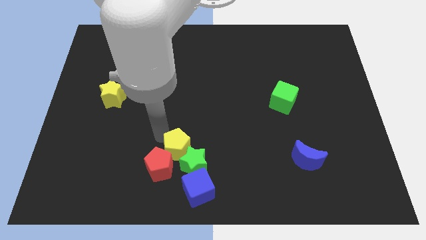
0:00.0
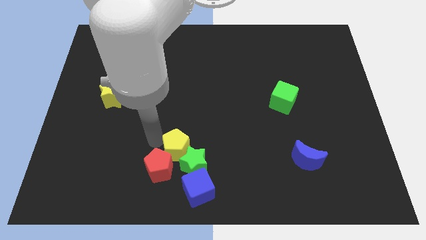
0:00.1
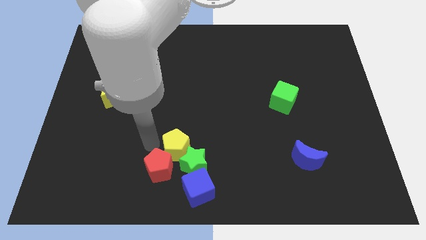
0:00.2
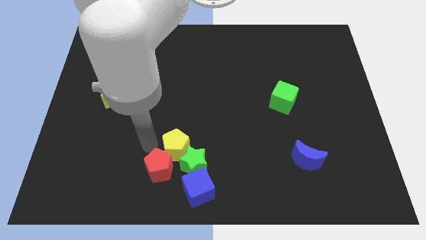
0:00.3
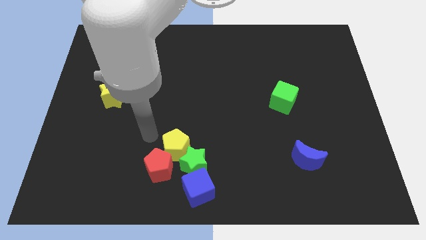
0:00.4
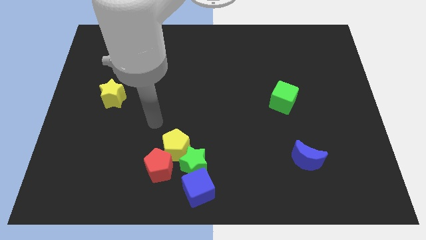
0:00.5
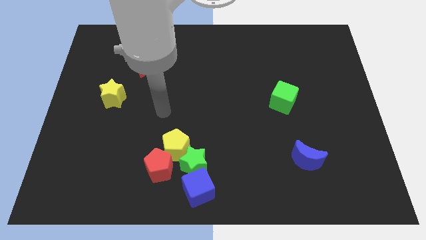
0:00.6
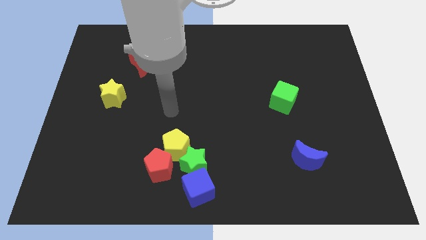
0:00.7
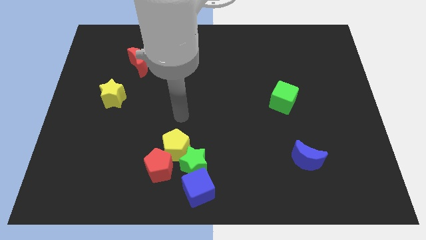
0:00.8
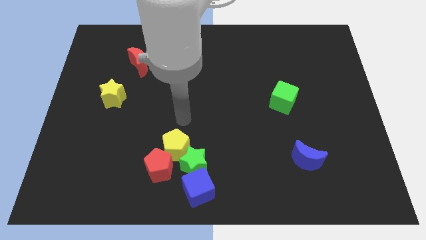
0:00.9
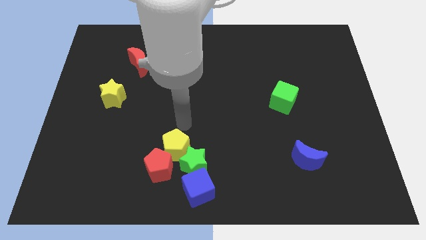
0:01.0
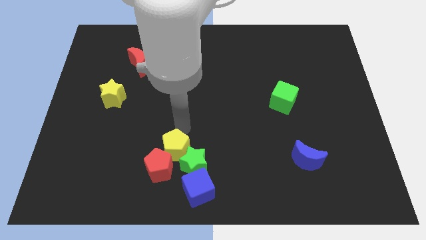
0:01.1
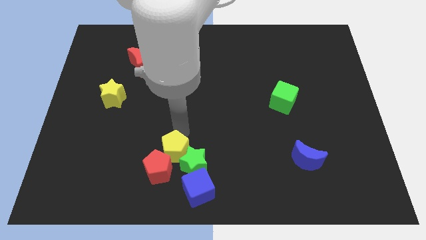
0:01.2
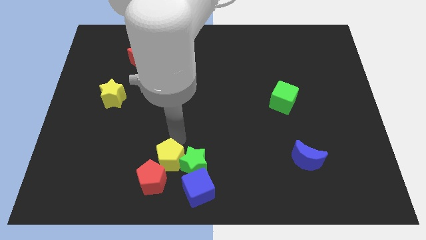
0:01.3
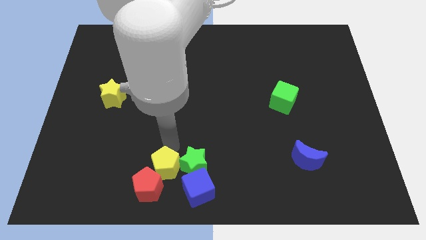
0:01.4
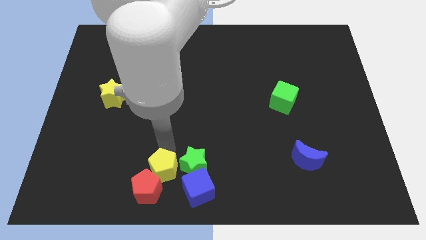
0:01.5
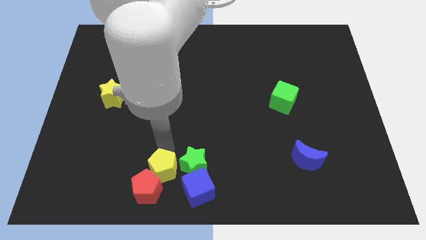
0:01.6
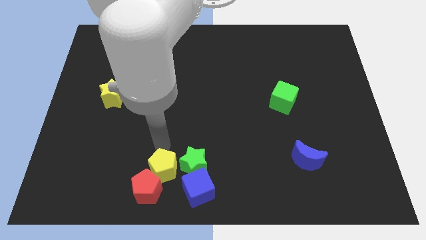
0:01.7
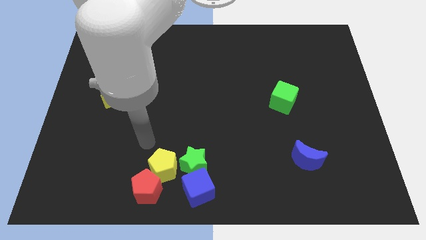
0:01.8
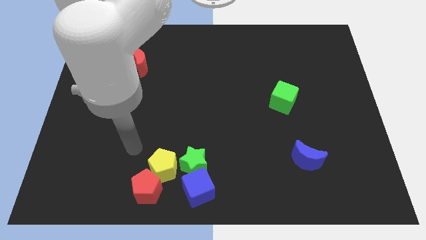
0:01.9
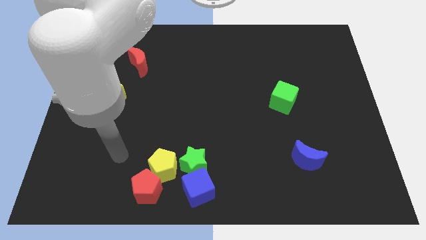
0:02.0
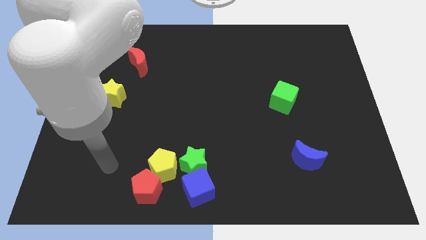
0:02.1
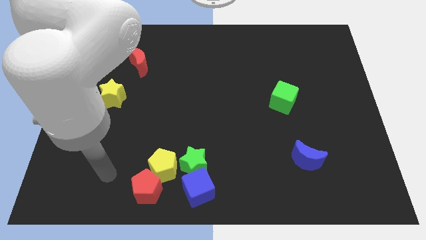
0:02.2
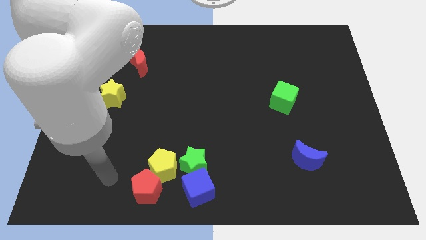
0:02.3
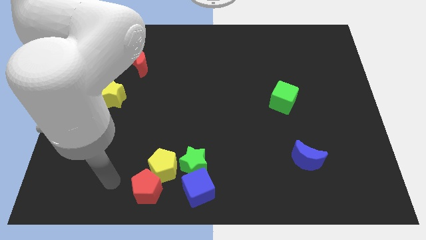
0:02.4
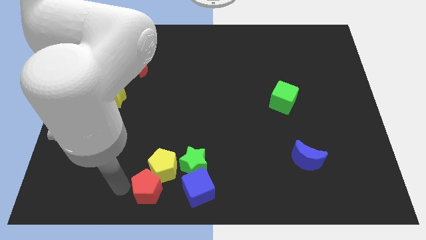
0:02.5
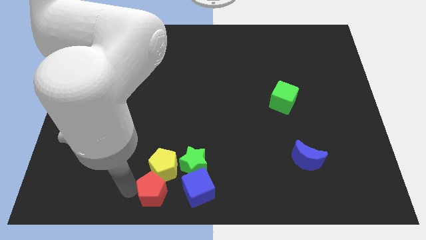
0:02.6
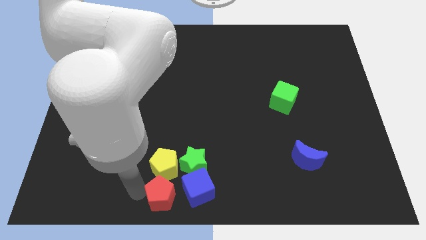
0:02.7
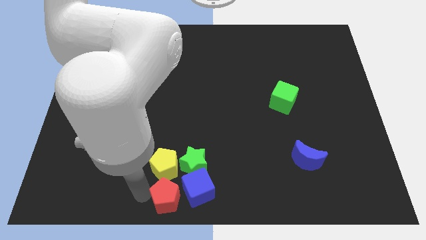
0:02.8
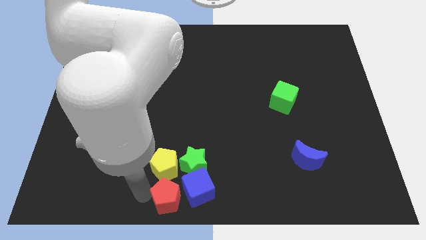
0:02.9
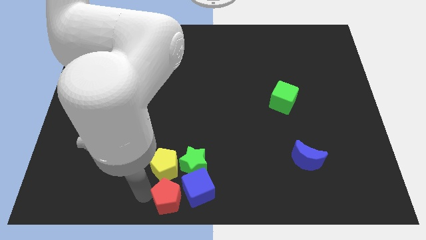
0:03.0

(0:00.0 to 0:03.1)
move red pentagon at bottom middle of the board

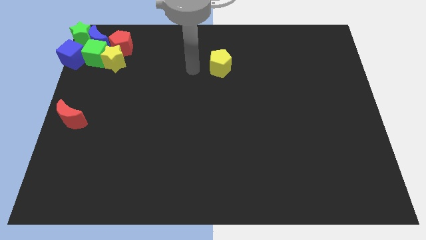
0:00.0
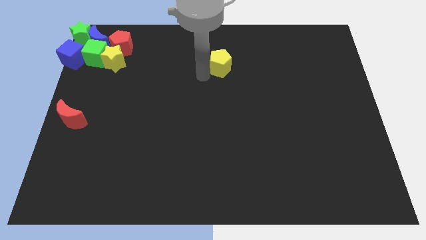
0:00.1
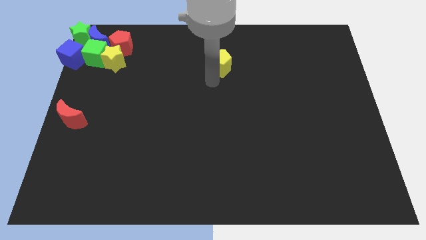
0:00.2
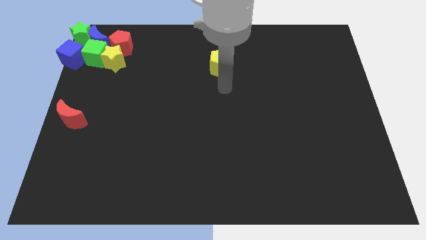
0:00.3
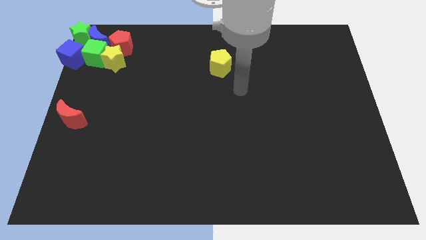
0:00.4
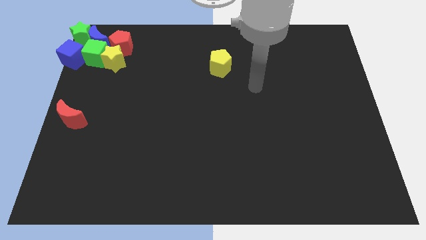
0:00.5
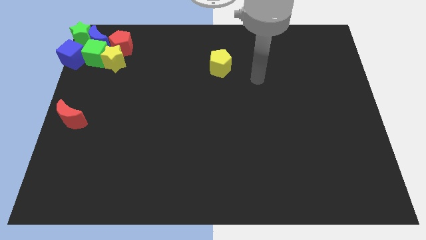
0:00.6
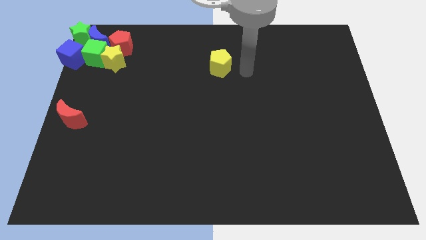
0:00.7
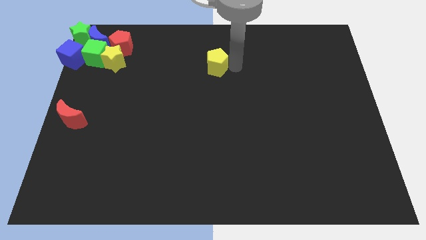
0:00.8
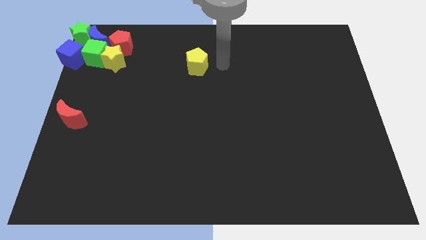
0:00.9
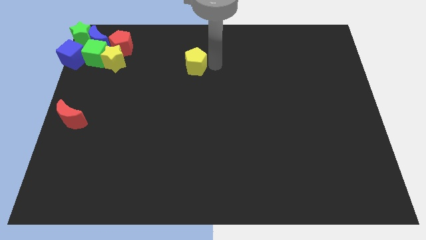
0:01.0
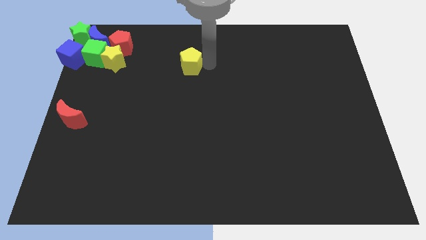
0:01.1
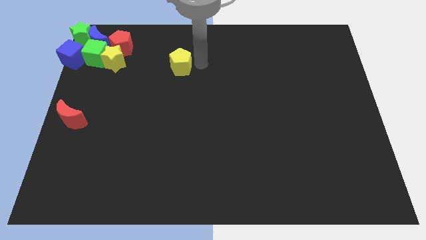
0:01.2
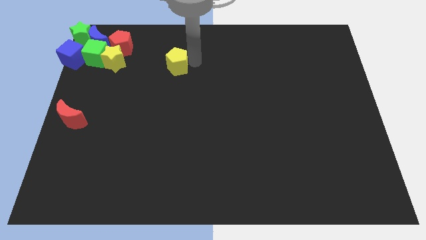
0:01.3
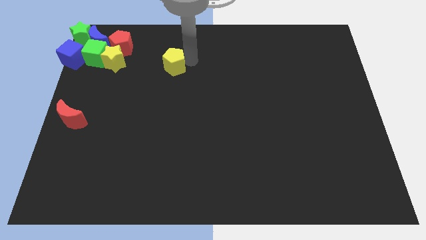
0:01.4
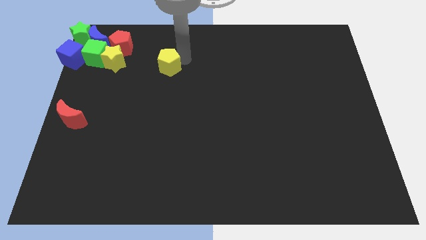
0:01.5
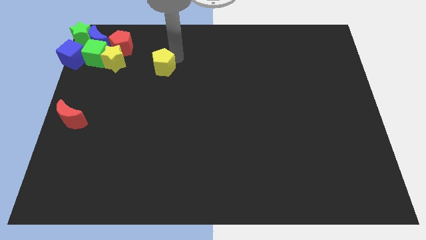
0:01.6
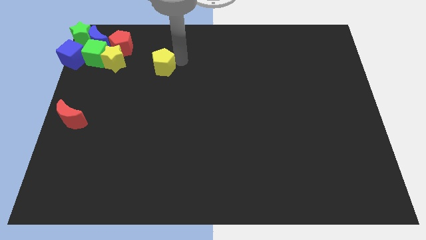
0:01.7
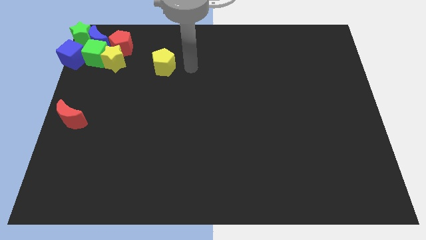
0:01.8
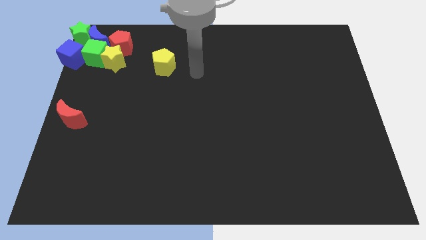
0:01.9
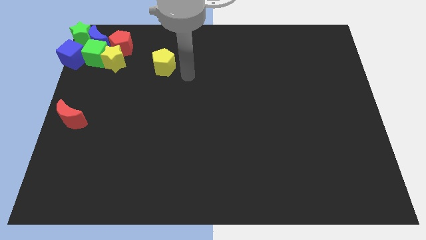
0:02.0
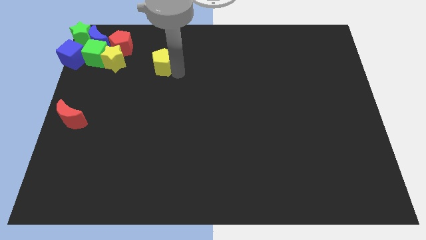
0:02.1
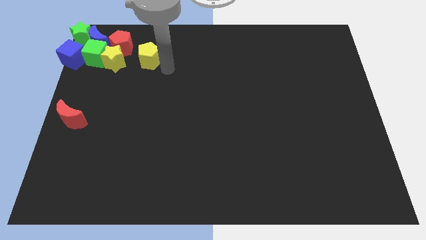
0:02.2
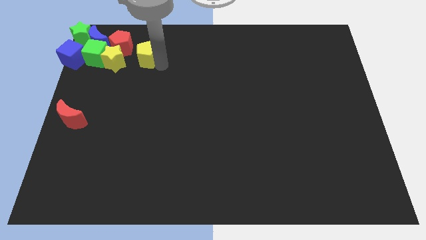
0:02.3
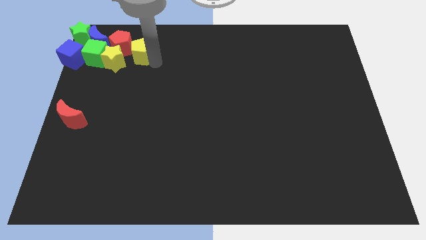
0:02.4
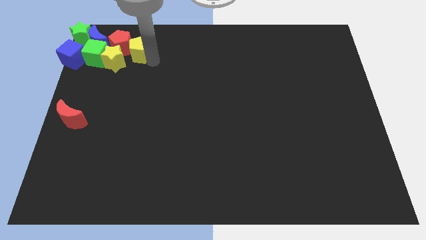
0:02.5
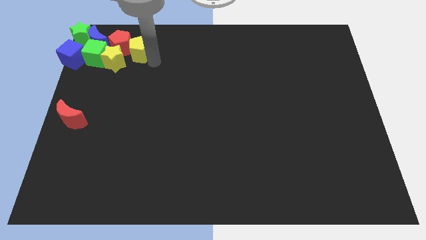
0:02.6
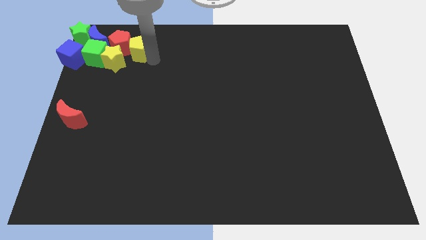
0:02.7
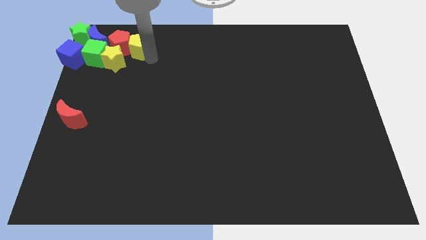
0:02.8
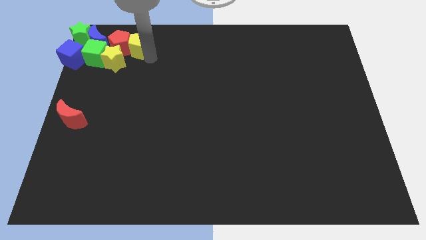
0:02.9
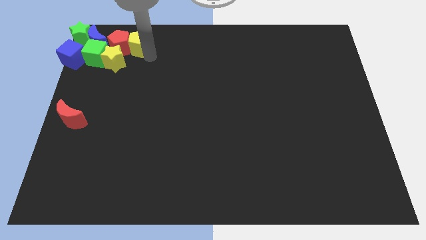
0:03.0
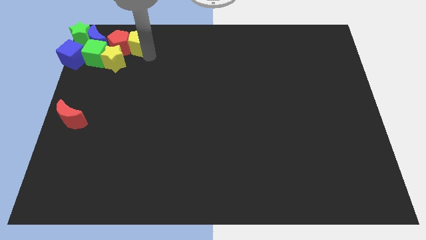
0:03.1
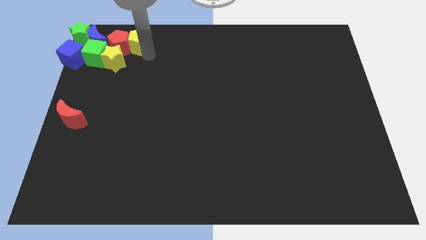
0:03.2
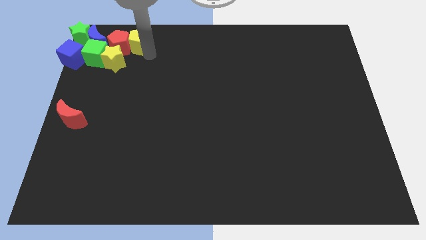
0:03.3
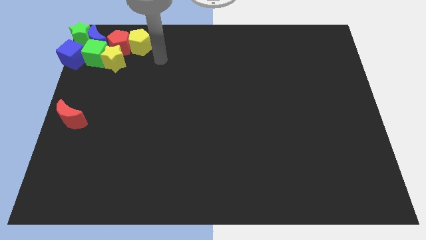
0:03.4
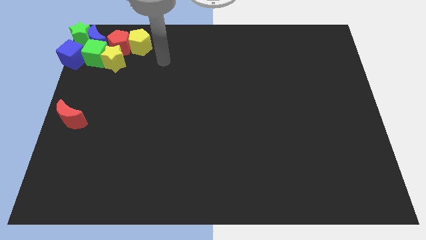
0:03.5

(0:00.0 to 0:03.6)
move the yellow pentagon to the right of the red pentagon

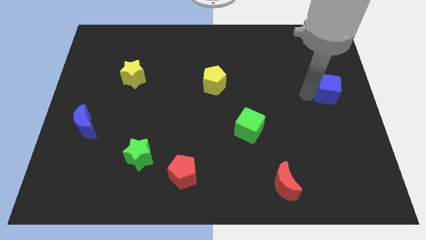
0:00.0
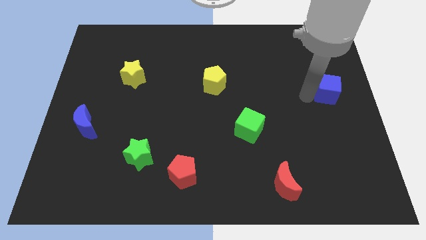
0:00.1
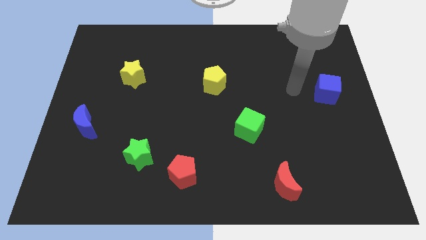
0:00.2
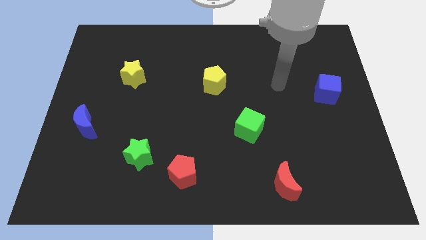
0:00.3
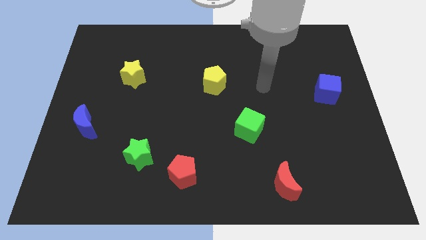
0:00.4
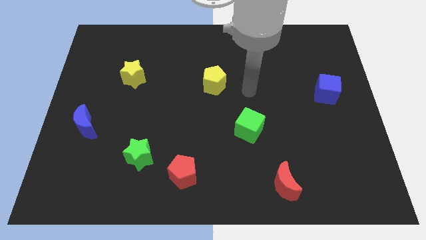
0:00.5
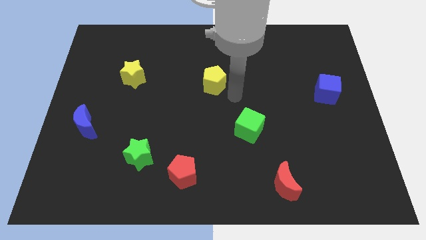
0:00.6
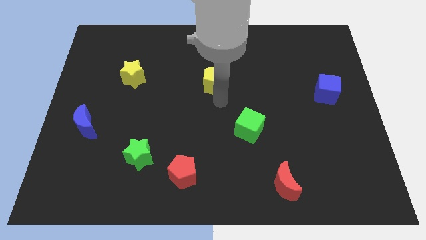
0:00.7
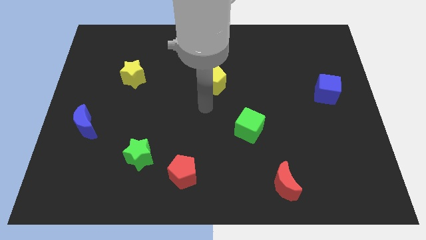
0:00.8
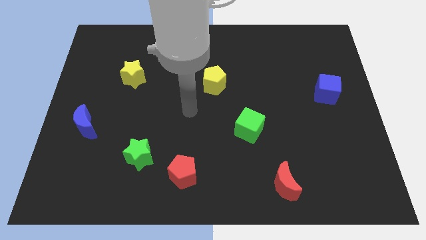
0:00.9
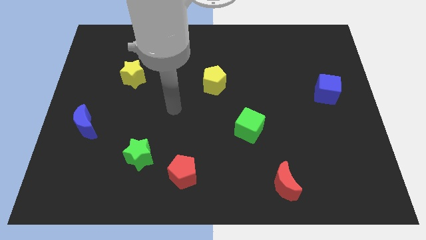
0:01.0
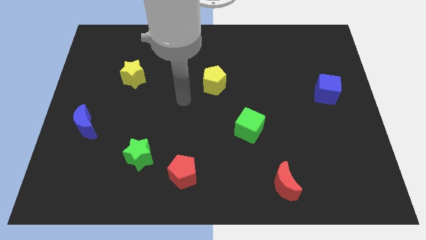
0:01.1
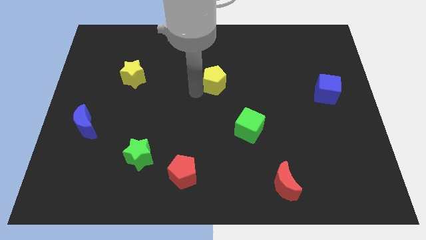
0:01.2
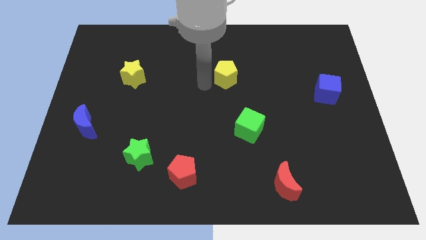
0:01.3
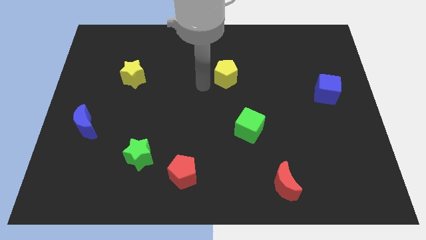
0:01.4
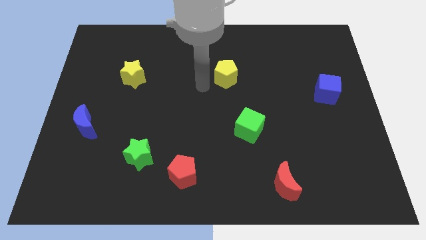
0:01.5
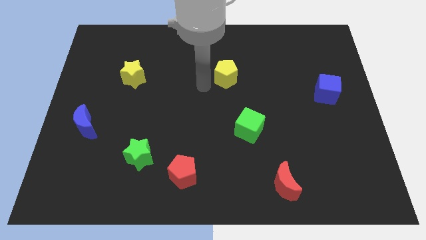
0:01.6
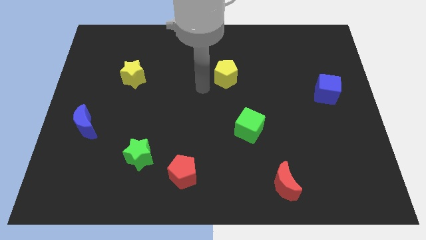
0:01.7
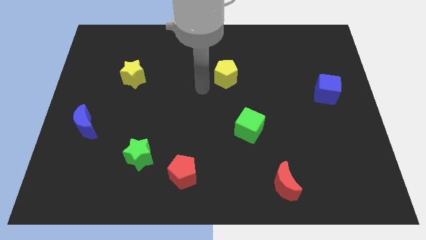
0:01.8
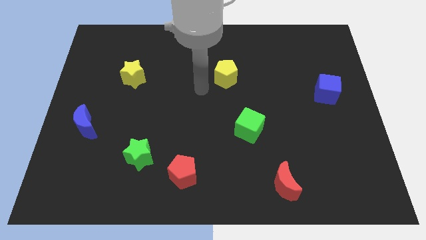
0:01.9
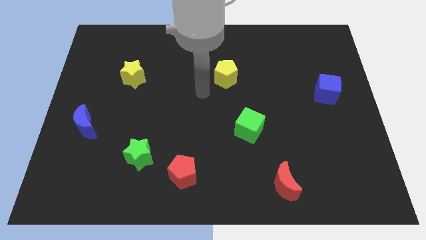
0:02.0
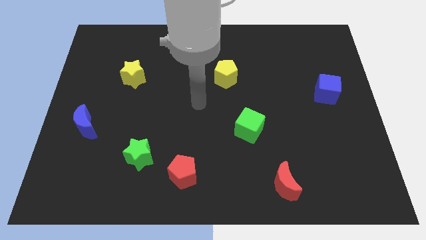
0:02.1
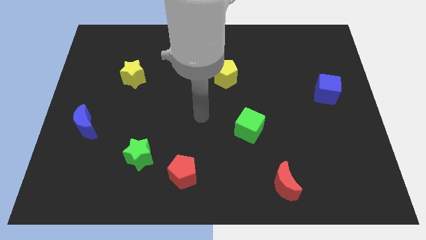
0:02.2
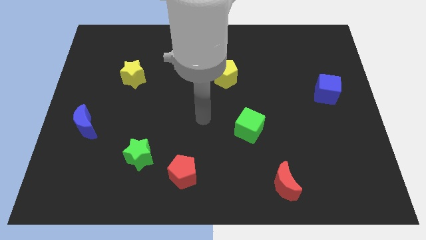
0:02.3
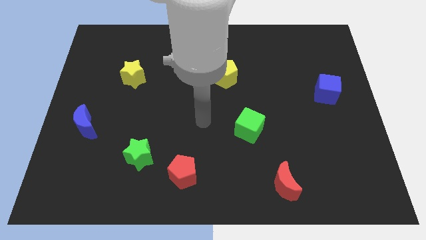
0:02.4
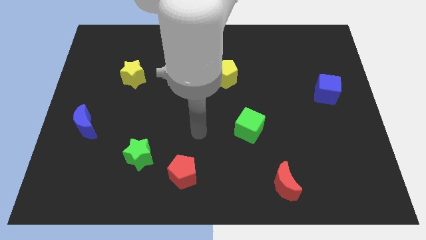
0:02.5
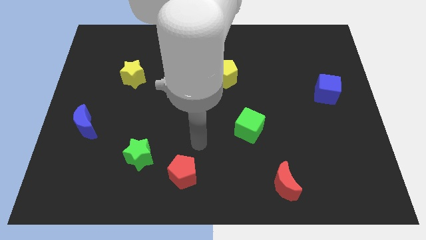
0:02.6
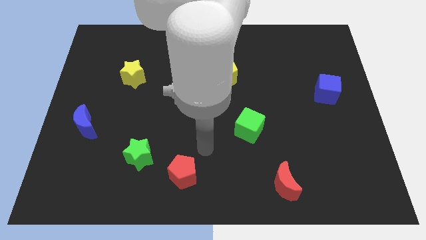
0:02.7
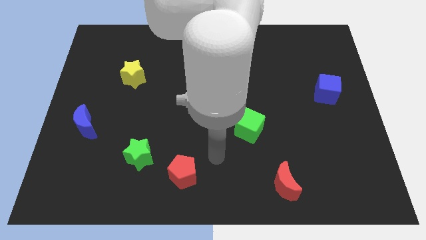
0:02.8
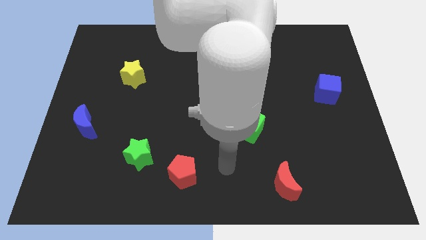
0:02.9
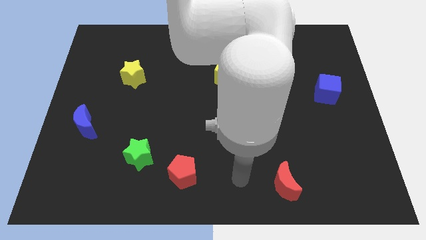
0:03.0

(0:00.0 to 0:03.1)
push the yellow pentagon parallel to the yellow star
